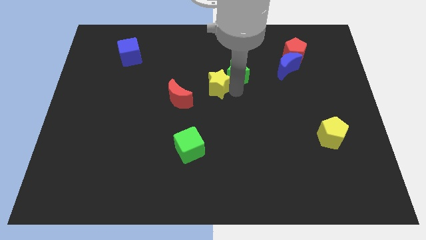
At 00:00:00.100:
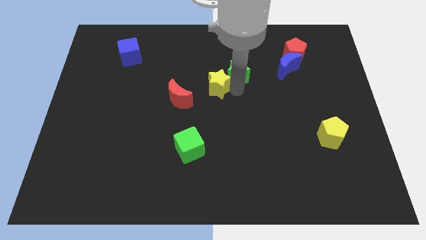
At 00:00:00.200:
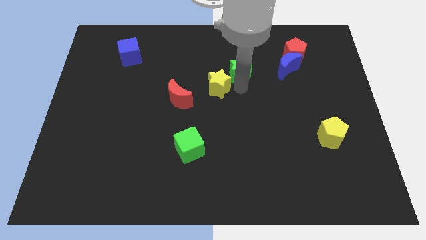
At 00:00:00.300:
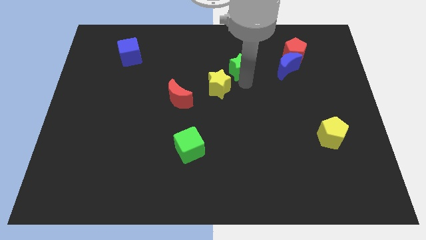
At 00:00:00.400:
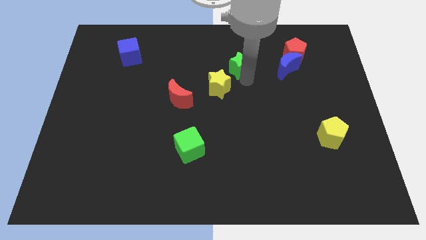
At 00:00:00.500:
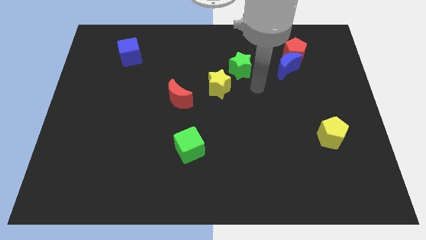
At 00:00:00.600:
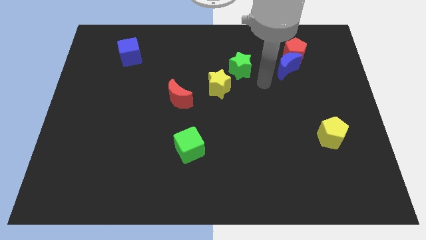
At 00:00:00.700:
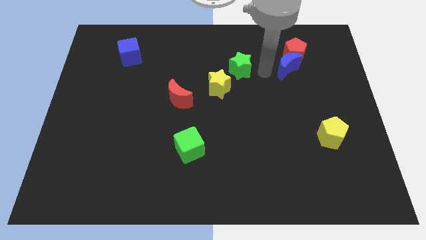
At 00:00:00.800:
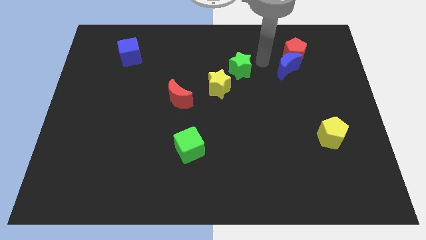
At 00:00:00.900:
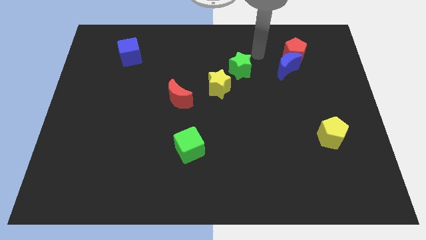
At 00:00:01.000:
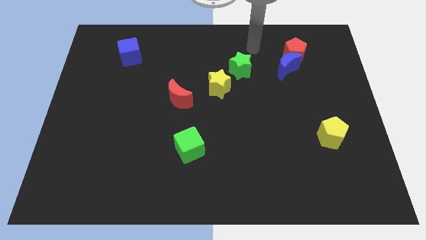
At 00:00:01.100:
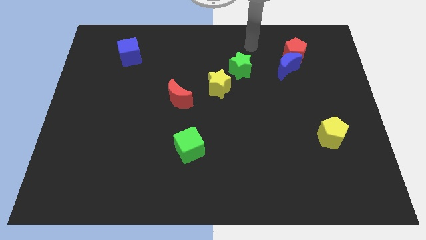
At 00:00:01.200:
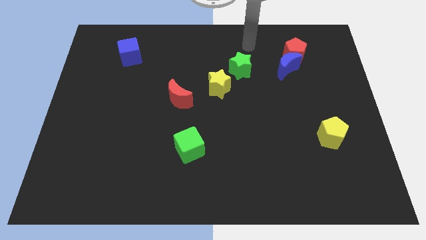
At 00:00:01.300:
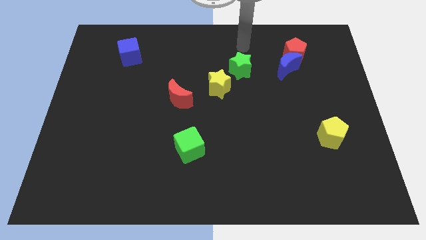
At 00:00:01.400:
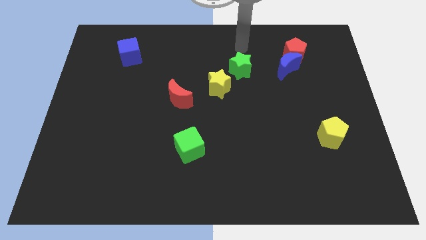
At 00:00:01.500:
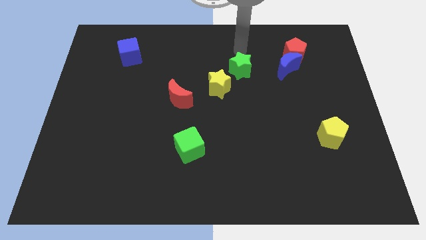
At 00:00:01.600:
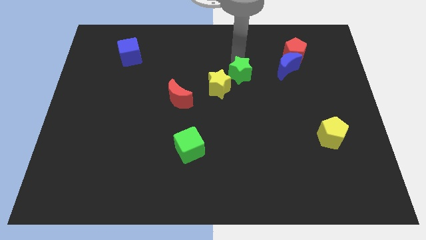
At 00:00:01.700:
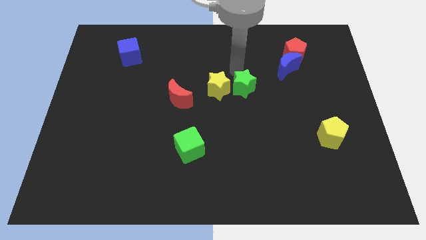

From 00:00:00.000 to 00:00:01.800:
place the green star towards the right side of the yellow star

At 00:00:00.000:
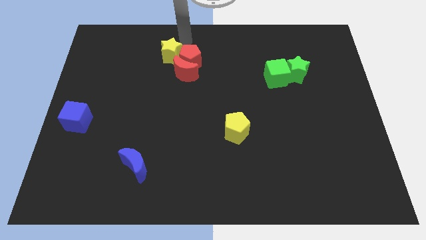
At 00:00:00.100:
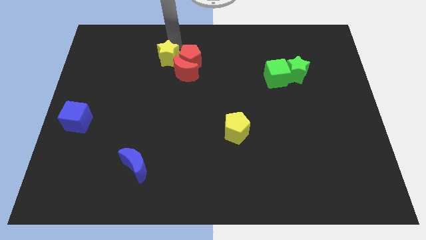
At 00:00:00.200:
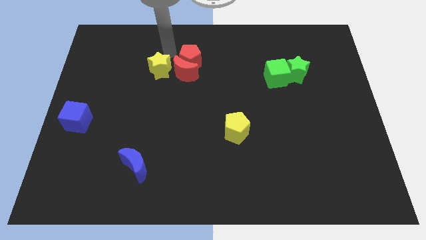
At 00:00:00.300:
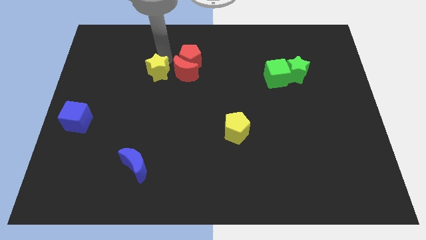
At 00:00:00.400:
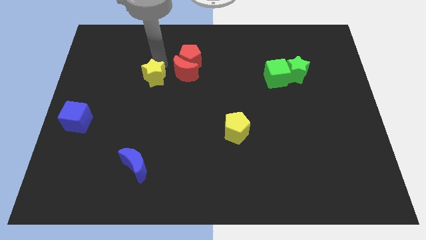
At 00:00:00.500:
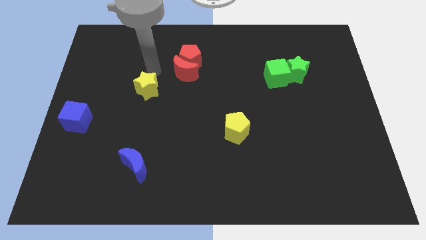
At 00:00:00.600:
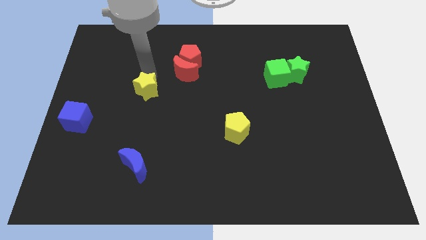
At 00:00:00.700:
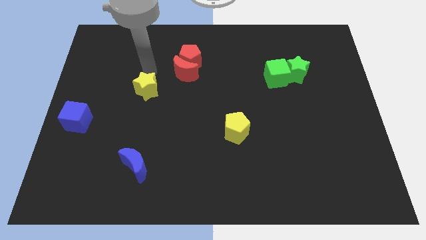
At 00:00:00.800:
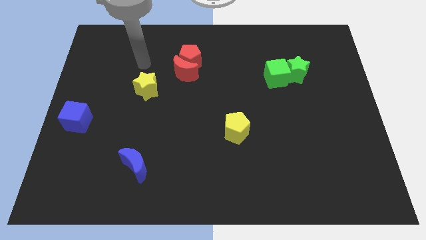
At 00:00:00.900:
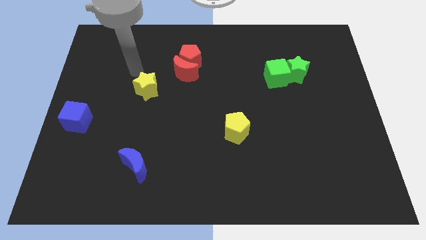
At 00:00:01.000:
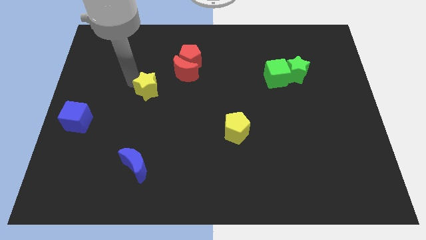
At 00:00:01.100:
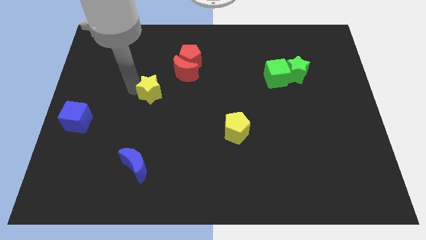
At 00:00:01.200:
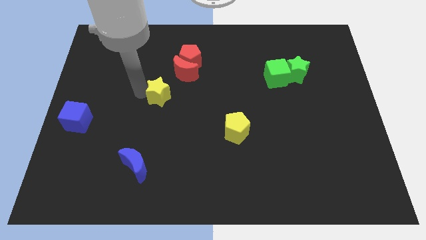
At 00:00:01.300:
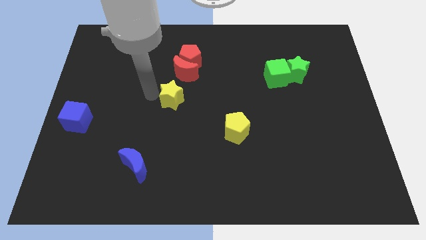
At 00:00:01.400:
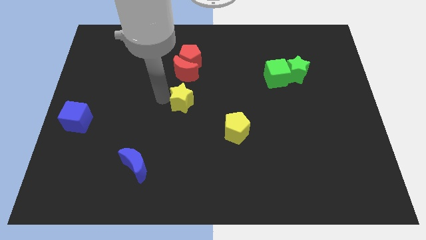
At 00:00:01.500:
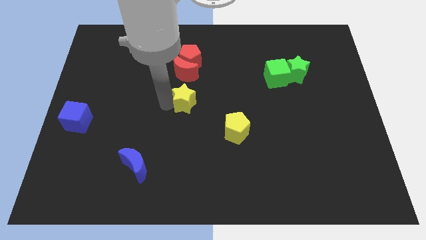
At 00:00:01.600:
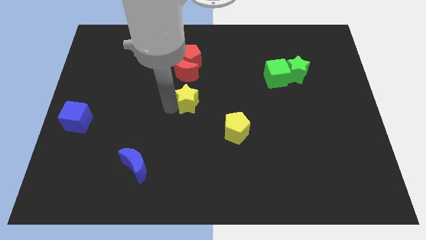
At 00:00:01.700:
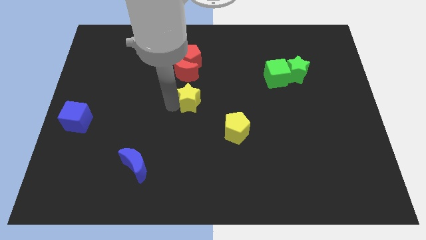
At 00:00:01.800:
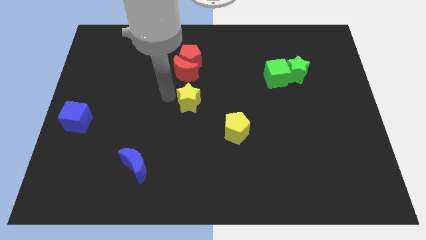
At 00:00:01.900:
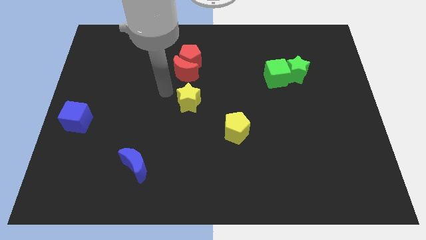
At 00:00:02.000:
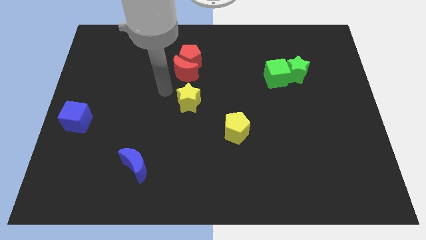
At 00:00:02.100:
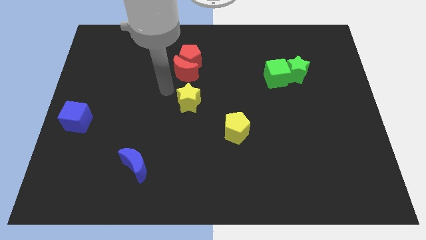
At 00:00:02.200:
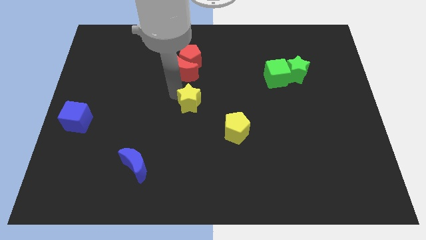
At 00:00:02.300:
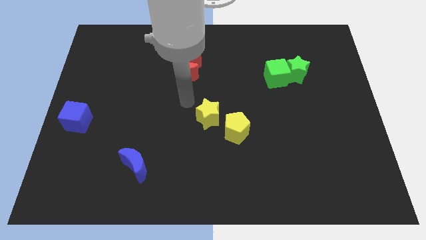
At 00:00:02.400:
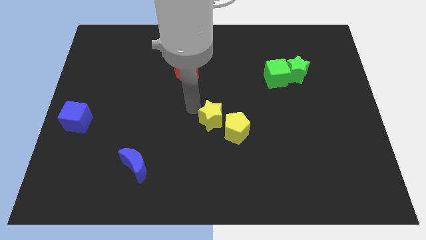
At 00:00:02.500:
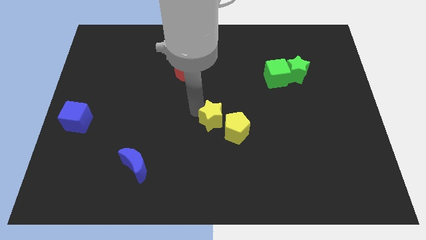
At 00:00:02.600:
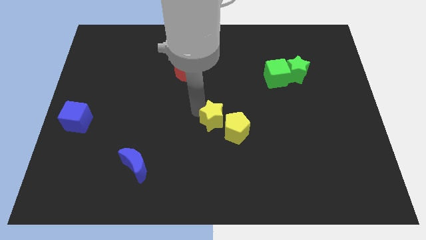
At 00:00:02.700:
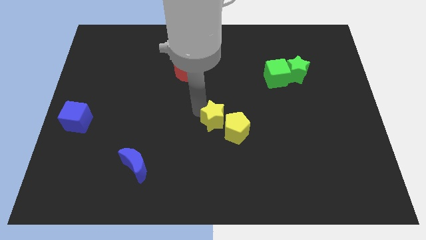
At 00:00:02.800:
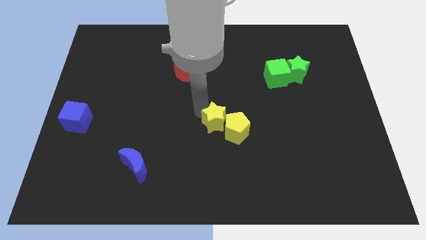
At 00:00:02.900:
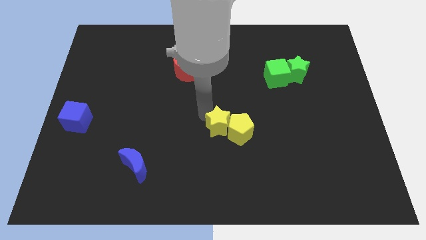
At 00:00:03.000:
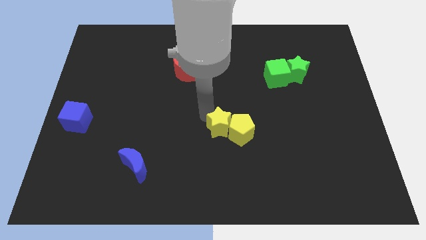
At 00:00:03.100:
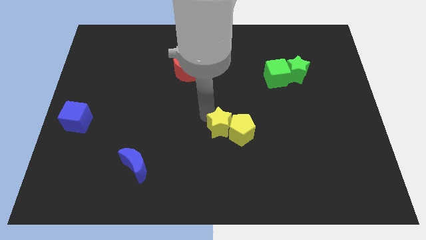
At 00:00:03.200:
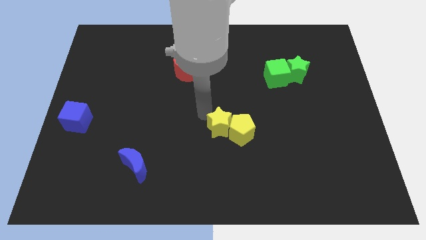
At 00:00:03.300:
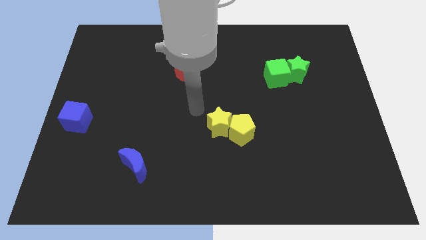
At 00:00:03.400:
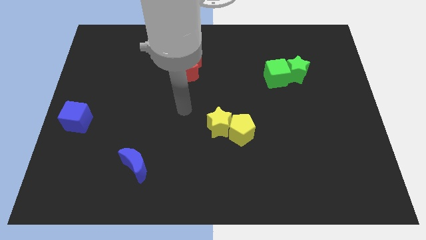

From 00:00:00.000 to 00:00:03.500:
move the yellow star to the center of the board

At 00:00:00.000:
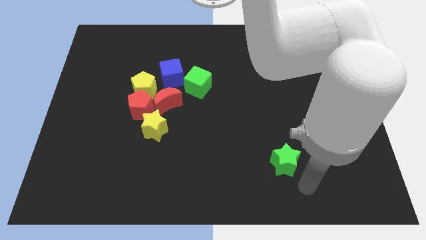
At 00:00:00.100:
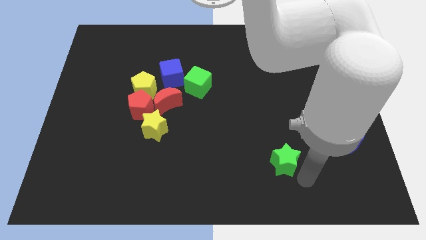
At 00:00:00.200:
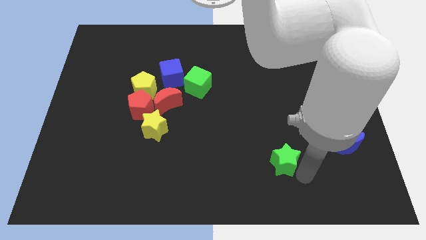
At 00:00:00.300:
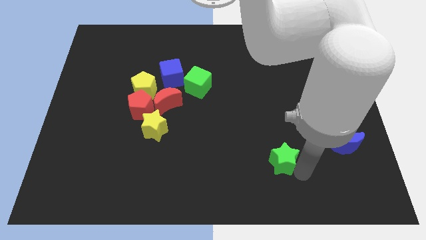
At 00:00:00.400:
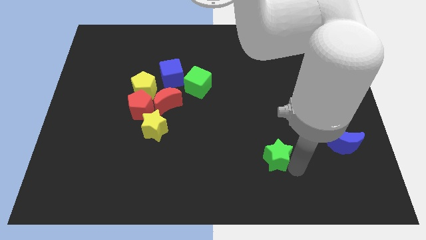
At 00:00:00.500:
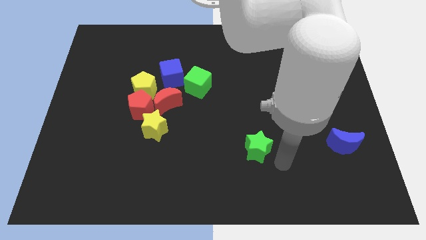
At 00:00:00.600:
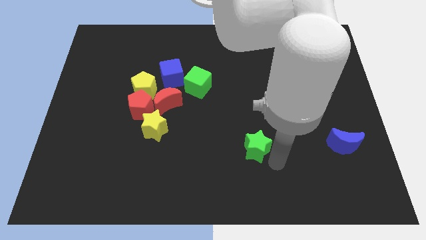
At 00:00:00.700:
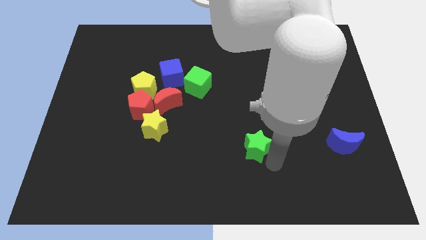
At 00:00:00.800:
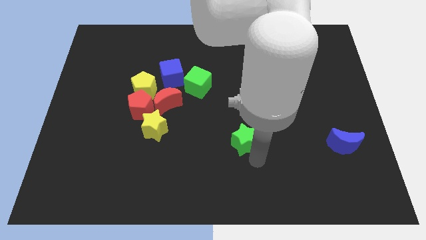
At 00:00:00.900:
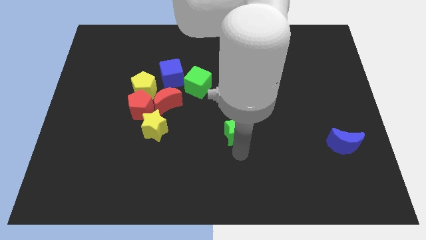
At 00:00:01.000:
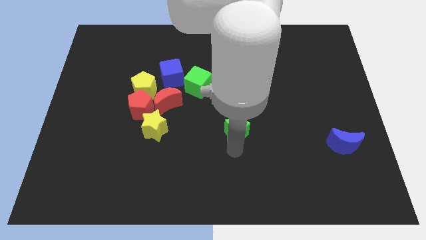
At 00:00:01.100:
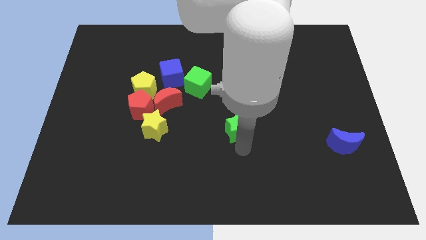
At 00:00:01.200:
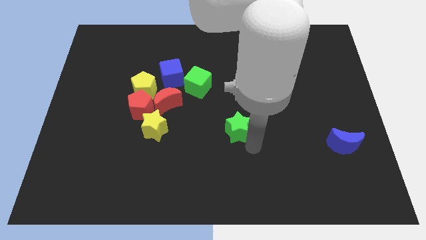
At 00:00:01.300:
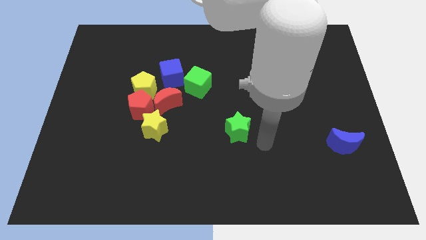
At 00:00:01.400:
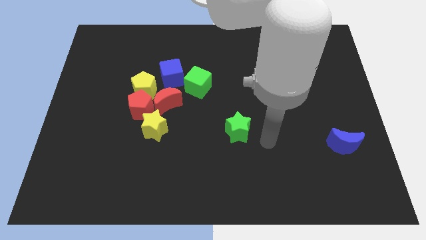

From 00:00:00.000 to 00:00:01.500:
move the green star horizontally right to the yellow star

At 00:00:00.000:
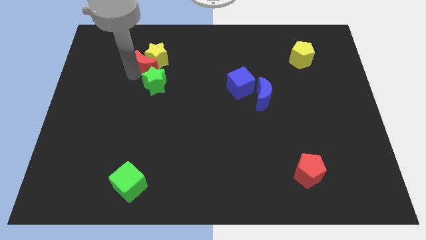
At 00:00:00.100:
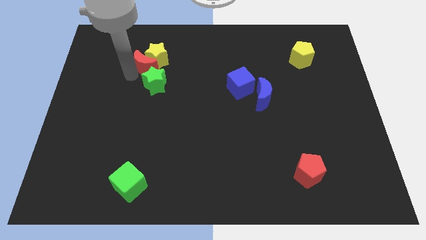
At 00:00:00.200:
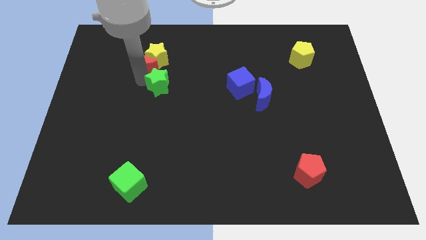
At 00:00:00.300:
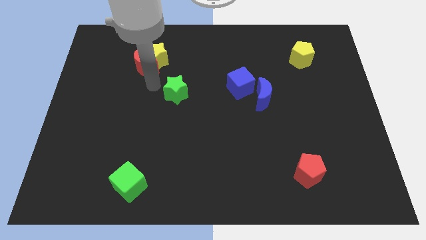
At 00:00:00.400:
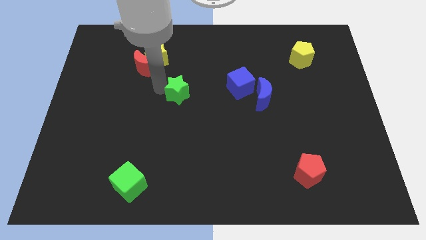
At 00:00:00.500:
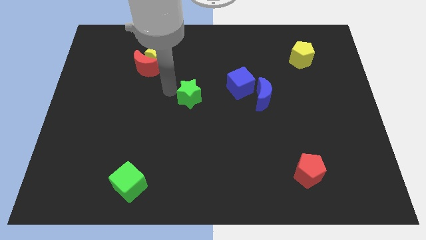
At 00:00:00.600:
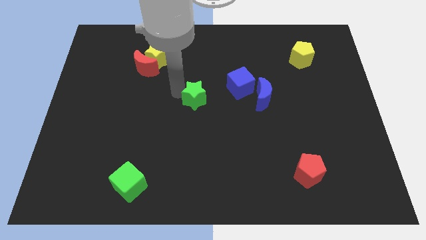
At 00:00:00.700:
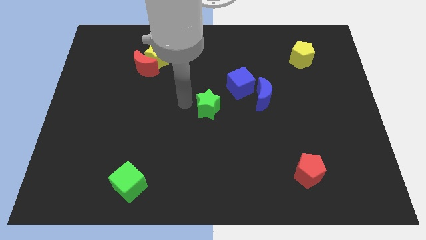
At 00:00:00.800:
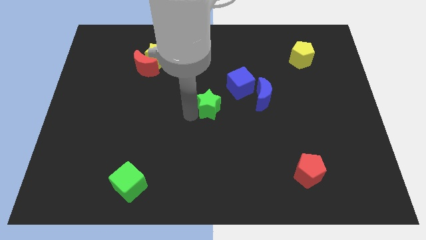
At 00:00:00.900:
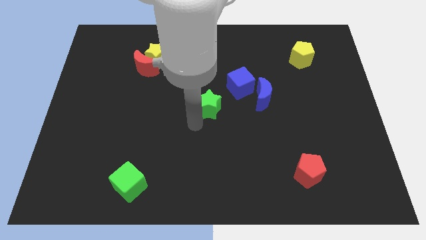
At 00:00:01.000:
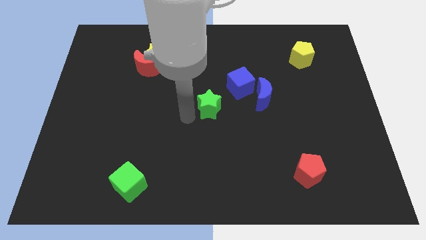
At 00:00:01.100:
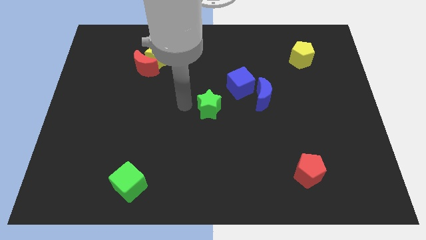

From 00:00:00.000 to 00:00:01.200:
place green star at center

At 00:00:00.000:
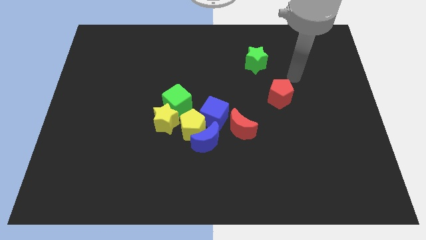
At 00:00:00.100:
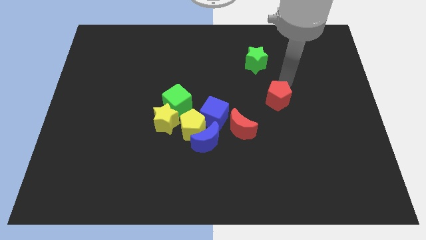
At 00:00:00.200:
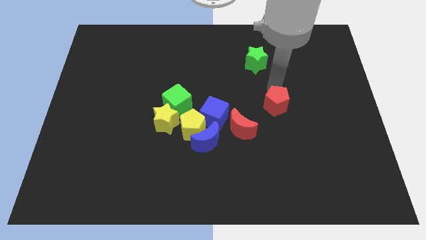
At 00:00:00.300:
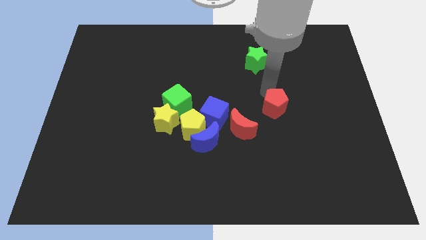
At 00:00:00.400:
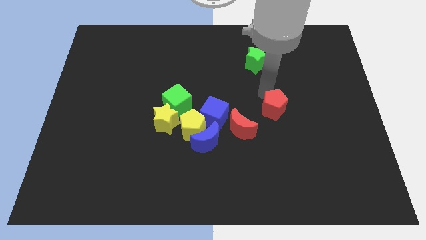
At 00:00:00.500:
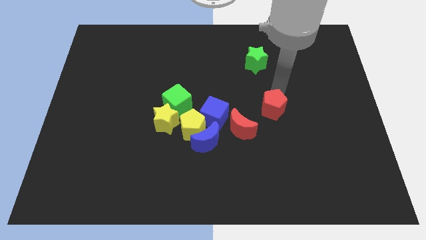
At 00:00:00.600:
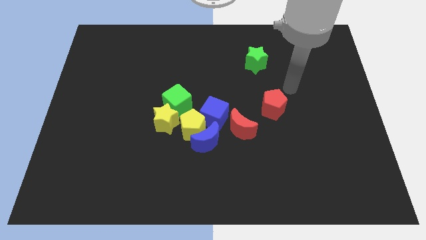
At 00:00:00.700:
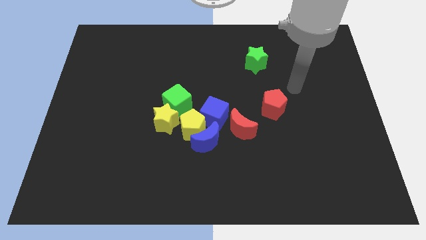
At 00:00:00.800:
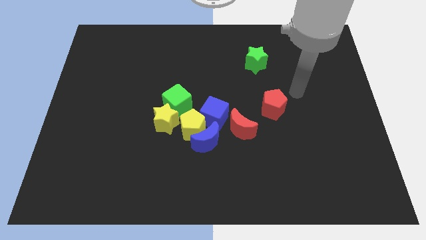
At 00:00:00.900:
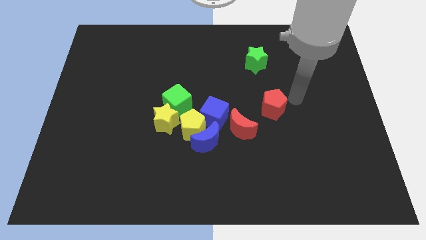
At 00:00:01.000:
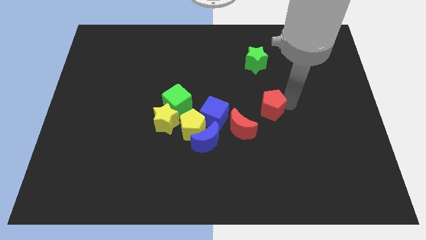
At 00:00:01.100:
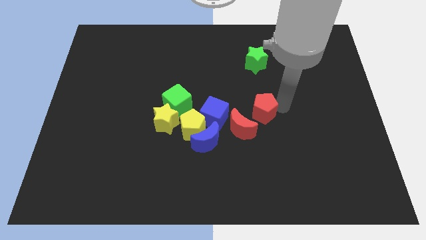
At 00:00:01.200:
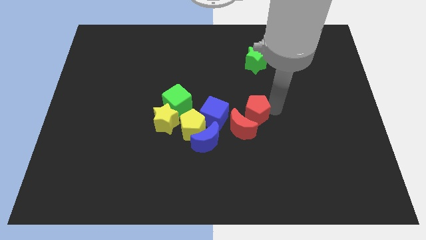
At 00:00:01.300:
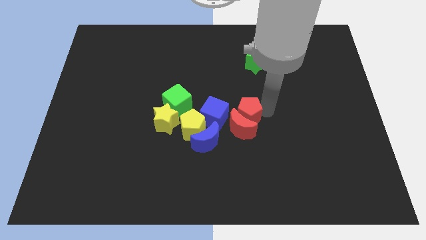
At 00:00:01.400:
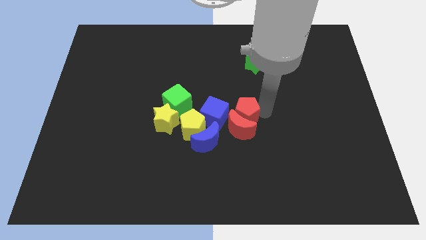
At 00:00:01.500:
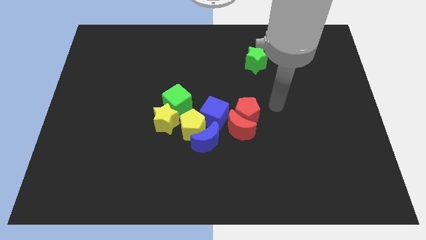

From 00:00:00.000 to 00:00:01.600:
move the red pentagon into the red crescent
